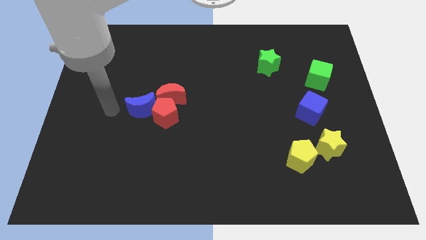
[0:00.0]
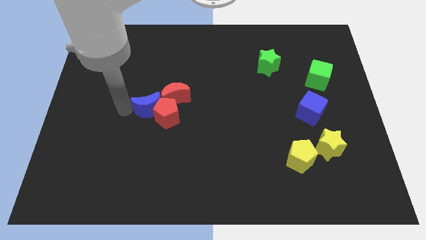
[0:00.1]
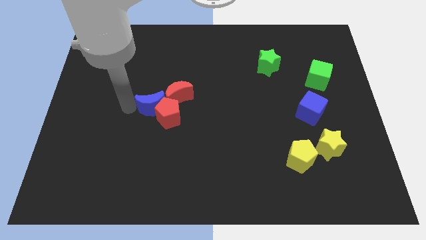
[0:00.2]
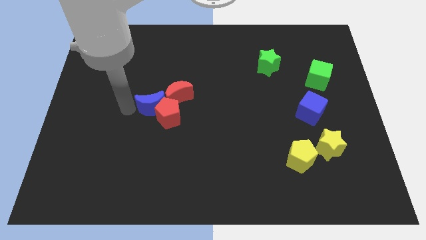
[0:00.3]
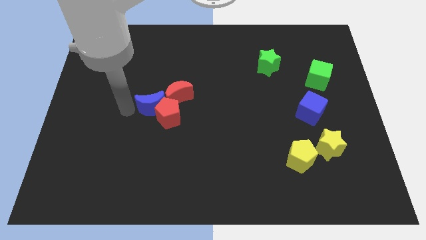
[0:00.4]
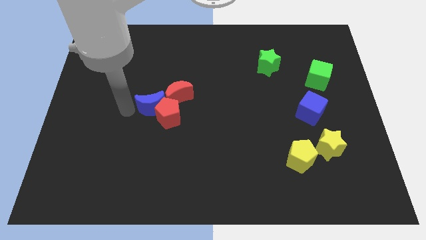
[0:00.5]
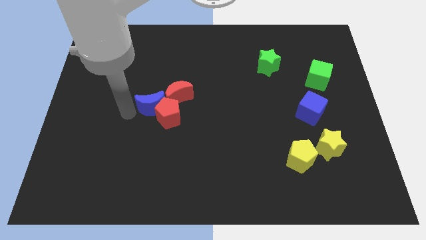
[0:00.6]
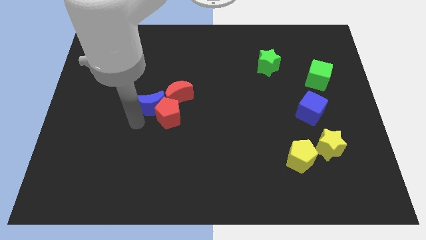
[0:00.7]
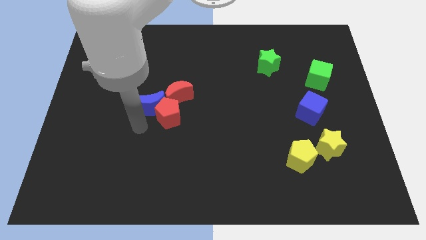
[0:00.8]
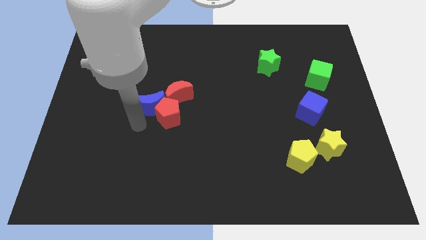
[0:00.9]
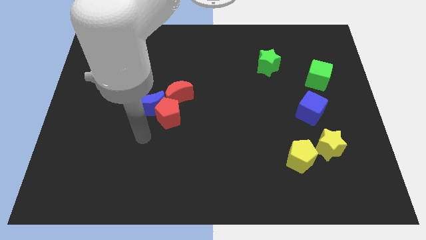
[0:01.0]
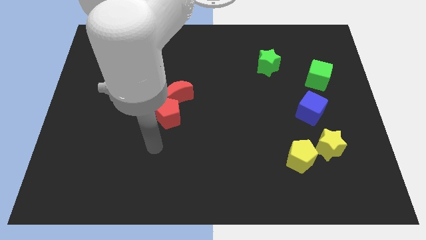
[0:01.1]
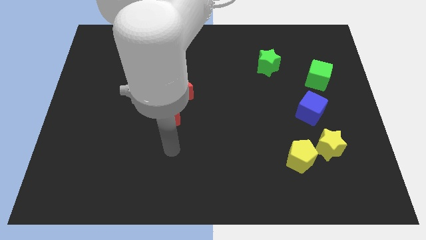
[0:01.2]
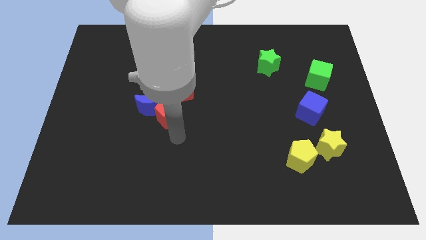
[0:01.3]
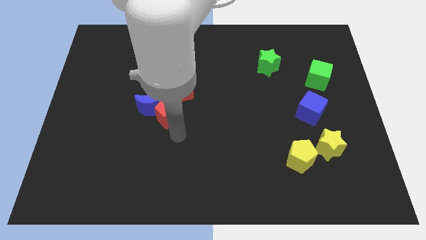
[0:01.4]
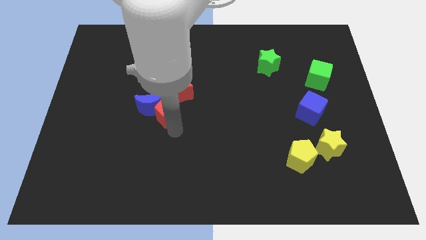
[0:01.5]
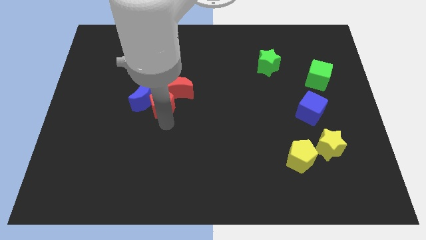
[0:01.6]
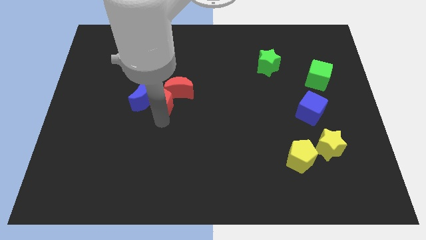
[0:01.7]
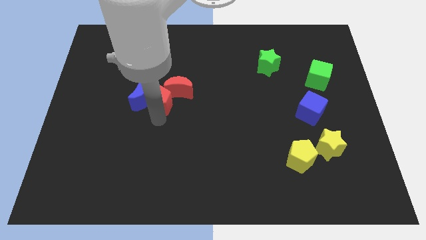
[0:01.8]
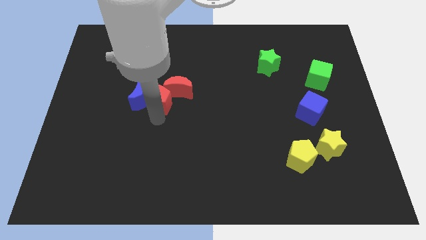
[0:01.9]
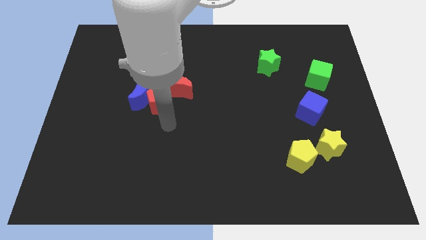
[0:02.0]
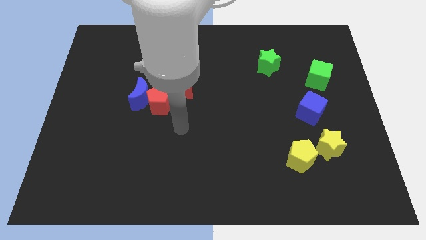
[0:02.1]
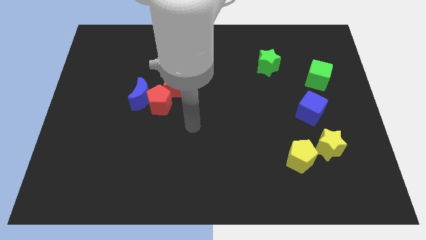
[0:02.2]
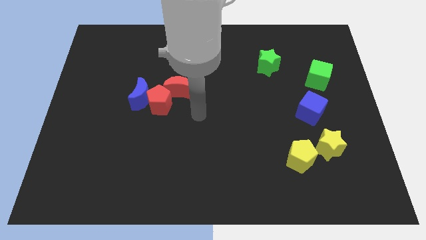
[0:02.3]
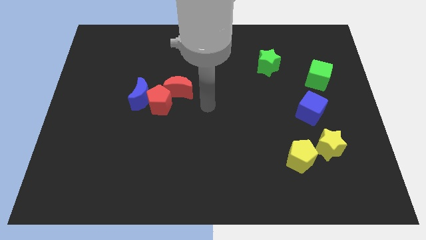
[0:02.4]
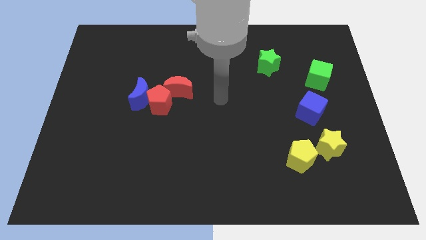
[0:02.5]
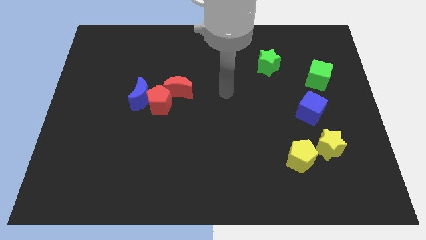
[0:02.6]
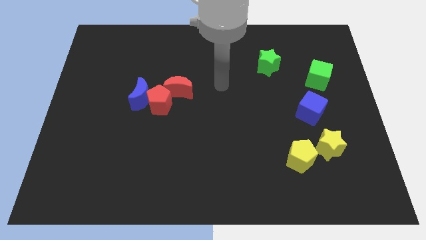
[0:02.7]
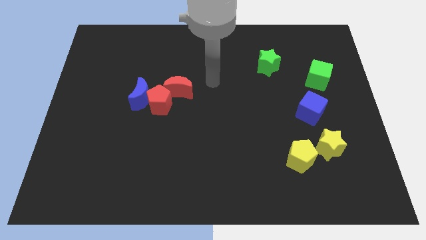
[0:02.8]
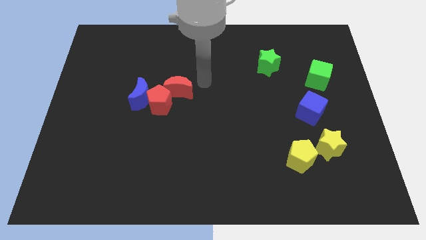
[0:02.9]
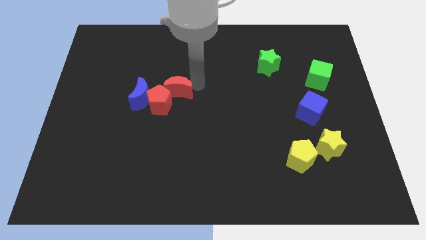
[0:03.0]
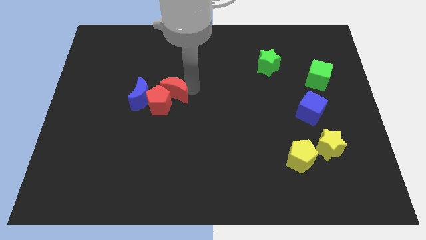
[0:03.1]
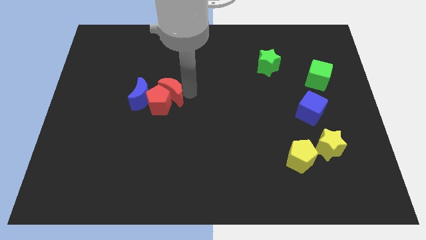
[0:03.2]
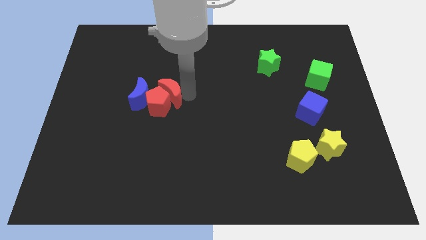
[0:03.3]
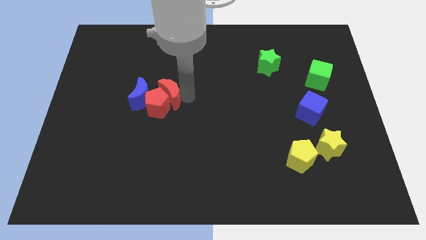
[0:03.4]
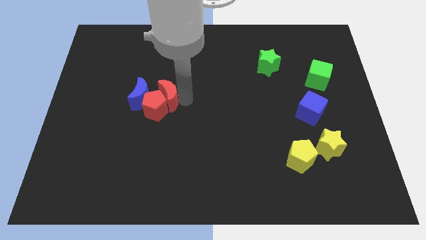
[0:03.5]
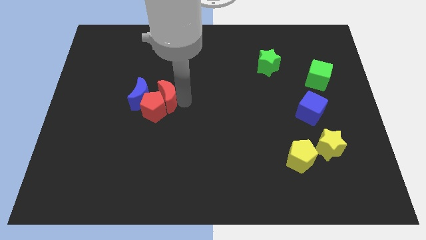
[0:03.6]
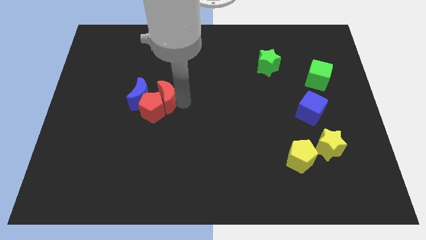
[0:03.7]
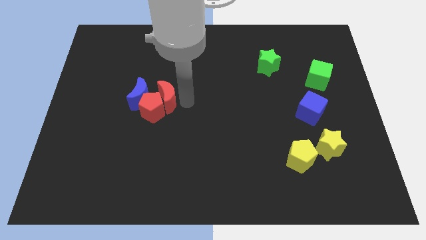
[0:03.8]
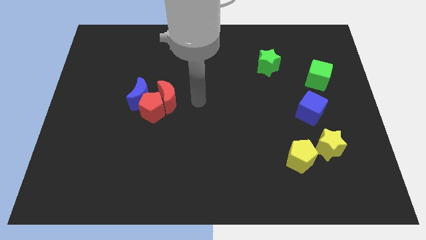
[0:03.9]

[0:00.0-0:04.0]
move the red blocks and blue moon slightly left

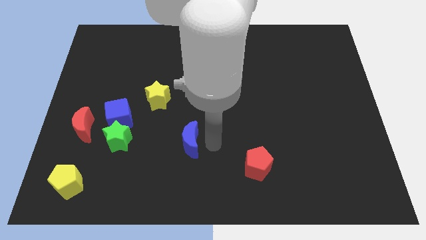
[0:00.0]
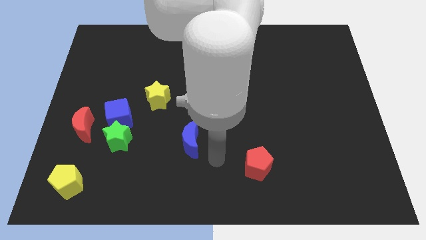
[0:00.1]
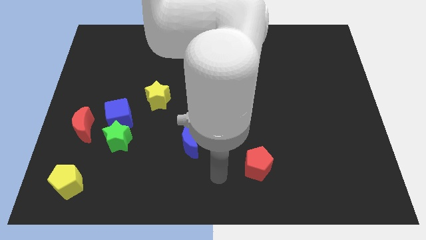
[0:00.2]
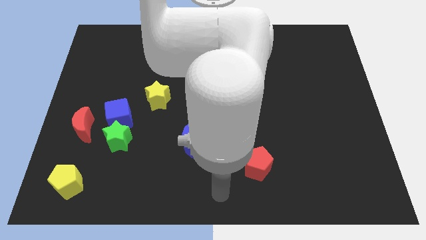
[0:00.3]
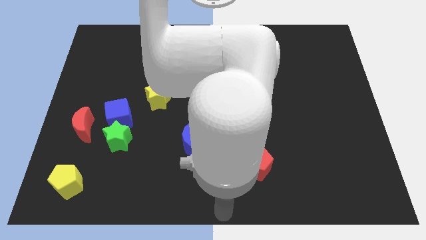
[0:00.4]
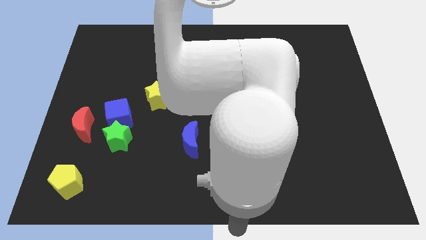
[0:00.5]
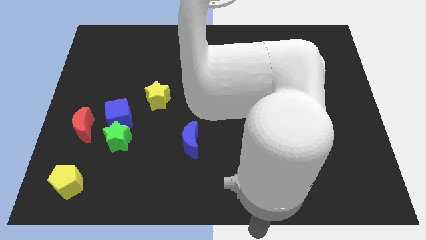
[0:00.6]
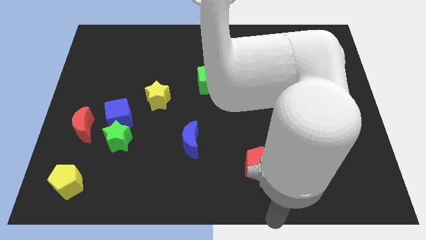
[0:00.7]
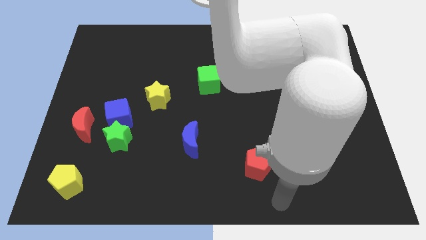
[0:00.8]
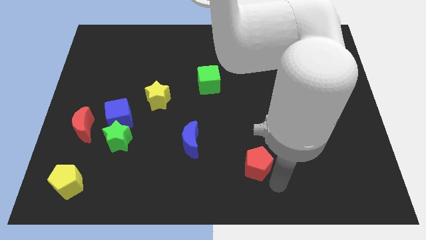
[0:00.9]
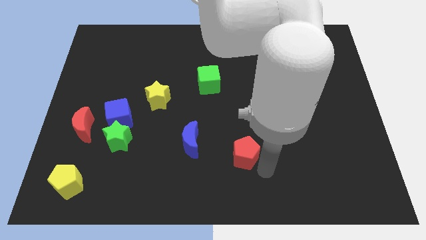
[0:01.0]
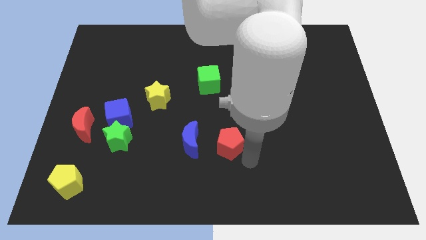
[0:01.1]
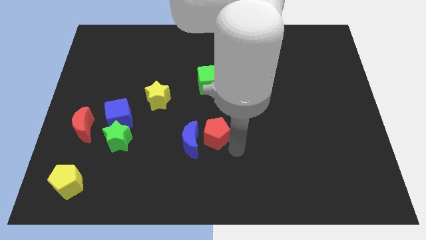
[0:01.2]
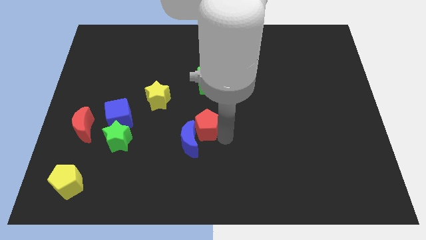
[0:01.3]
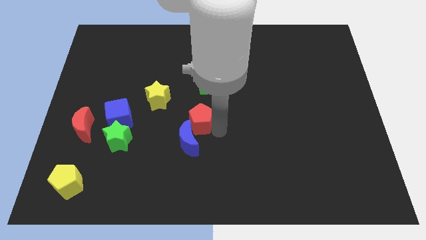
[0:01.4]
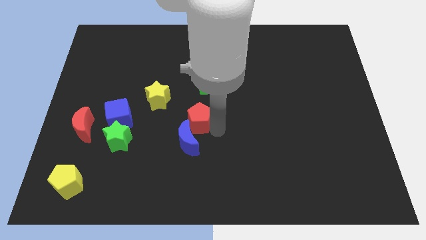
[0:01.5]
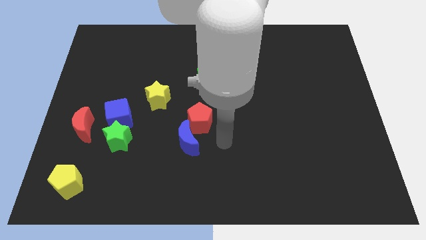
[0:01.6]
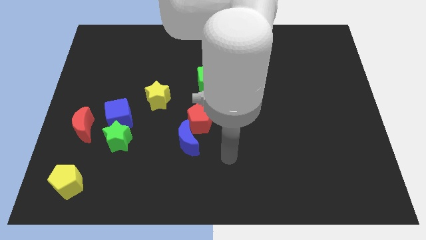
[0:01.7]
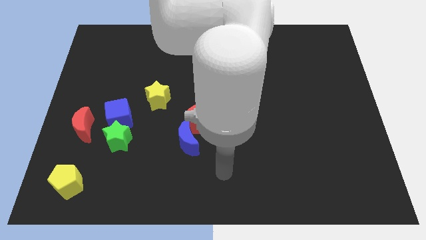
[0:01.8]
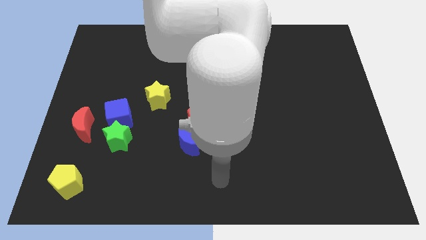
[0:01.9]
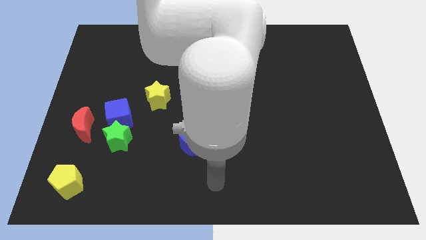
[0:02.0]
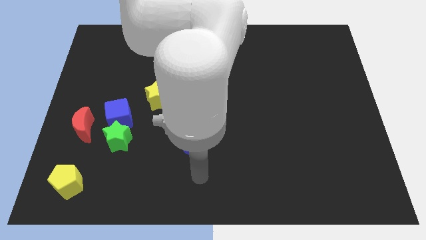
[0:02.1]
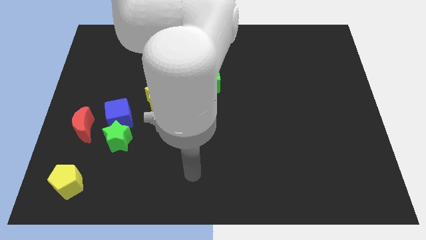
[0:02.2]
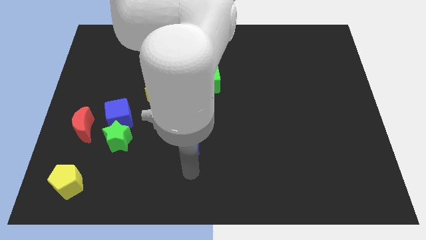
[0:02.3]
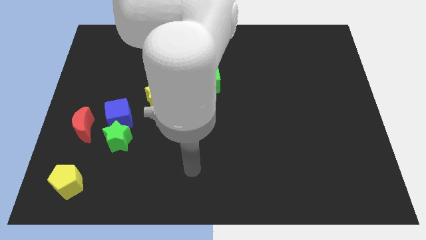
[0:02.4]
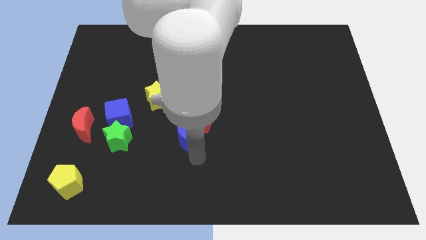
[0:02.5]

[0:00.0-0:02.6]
push the red pentagon to the top right of the blue moon

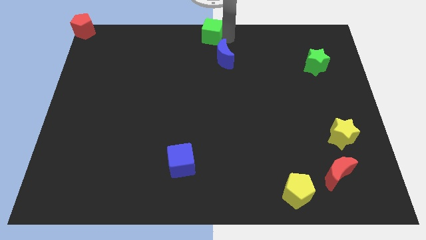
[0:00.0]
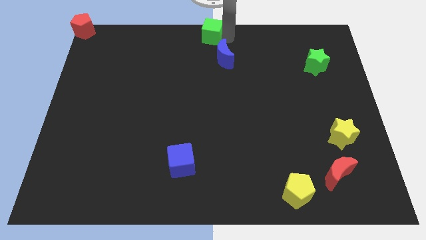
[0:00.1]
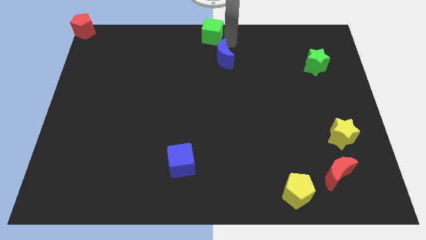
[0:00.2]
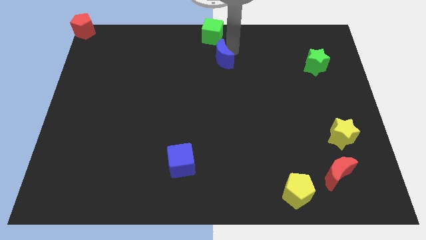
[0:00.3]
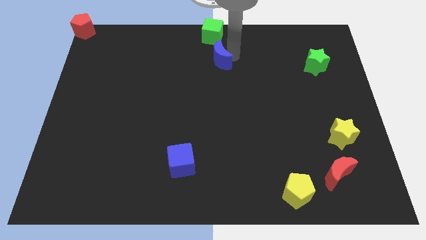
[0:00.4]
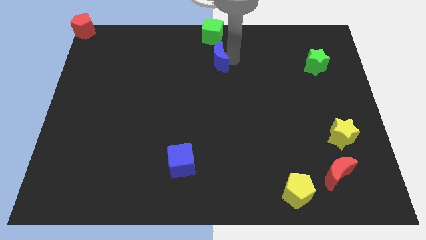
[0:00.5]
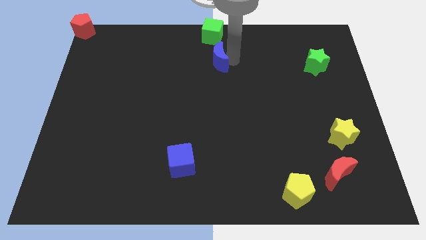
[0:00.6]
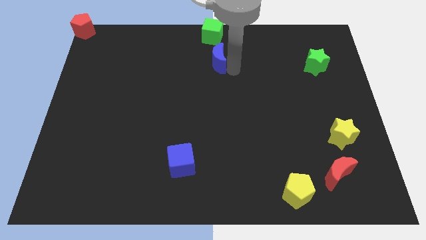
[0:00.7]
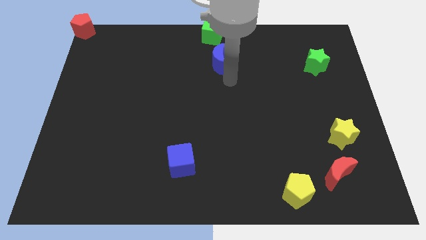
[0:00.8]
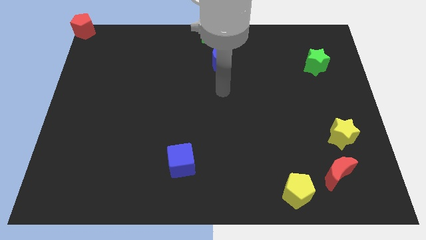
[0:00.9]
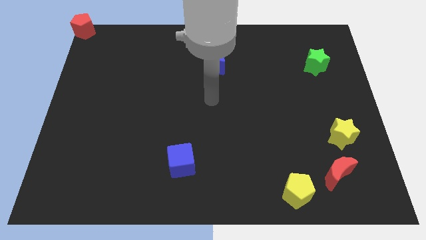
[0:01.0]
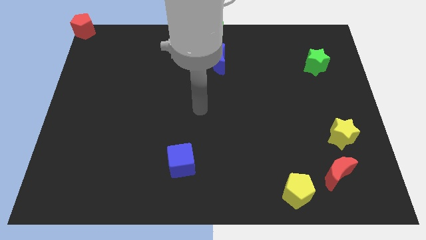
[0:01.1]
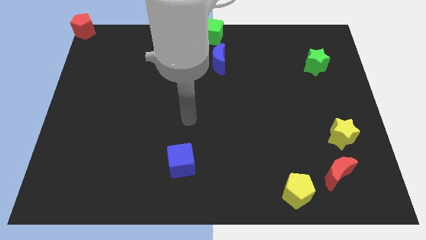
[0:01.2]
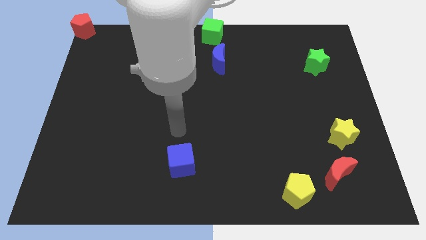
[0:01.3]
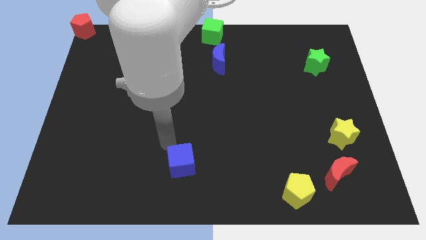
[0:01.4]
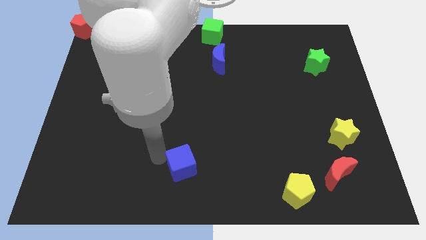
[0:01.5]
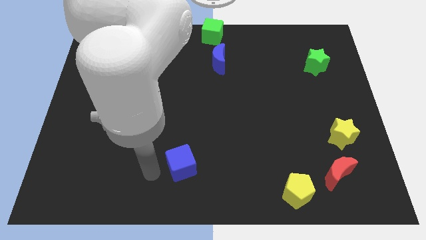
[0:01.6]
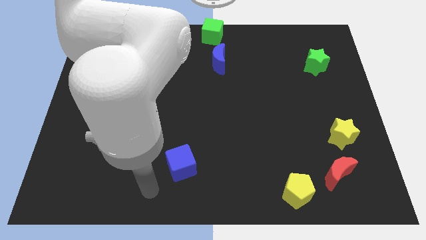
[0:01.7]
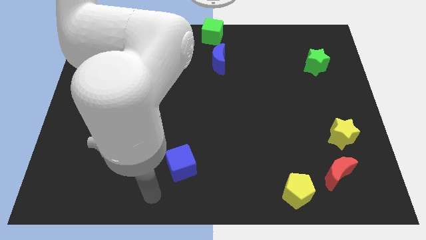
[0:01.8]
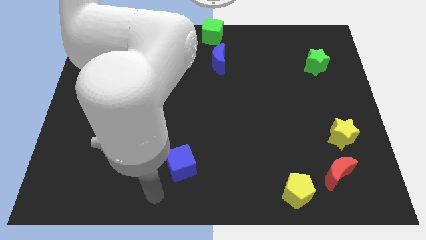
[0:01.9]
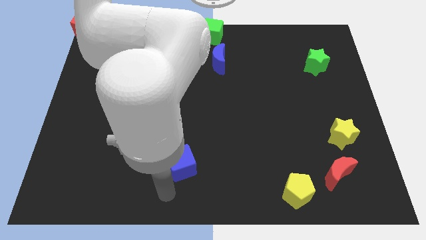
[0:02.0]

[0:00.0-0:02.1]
move your arm to the bottom of the blue cube

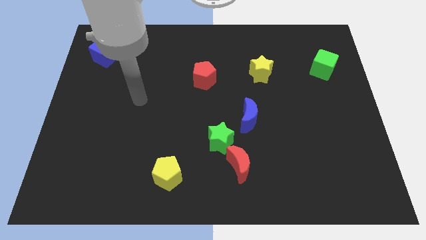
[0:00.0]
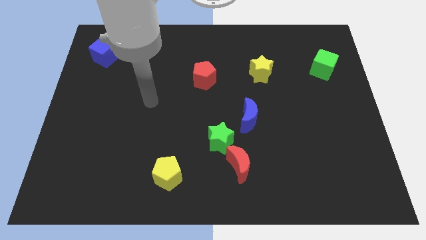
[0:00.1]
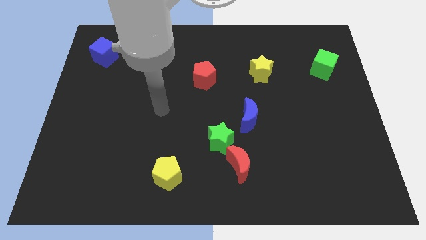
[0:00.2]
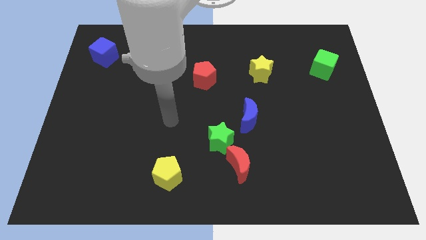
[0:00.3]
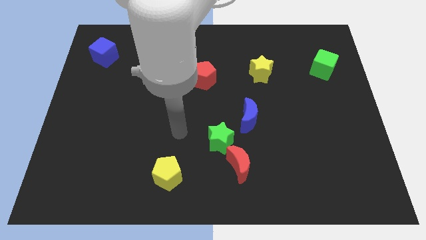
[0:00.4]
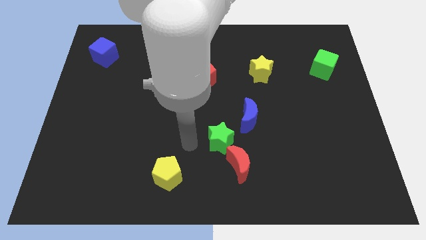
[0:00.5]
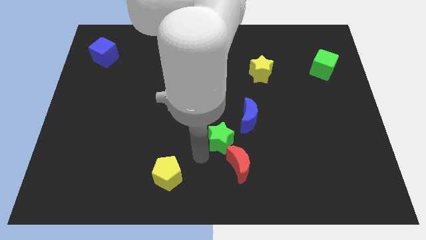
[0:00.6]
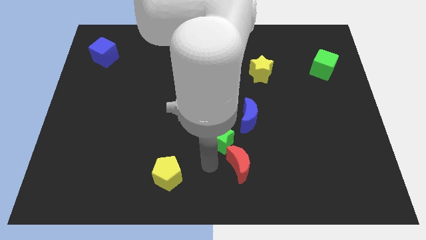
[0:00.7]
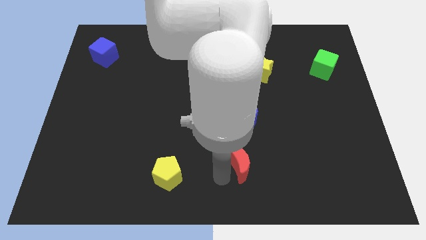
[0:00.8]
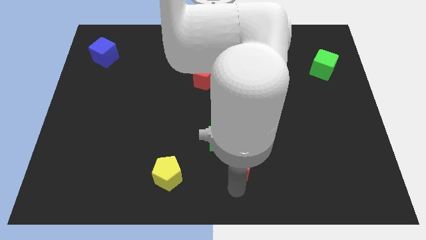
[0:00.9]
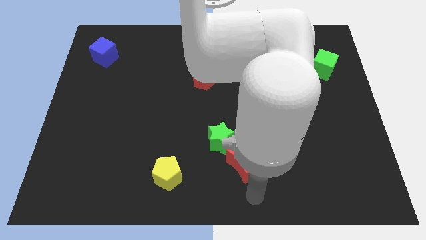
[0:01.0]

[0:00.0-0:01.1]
move arm towards the red crescent
